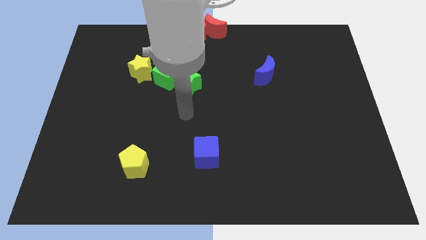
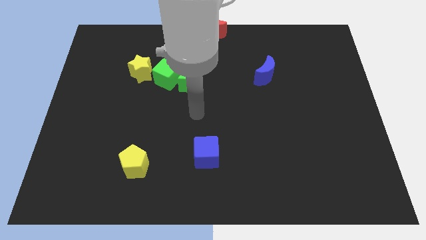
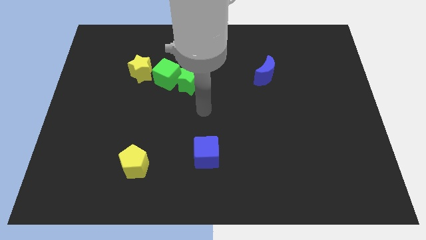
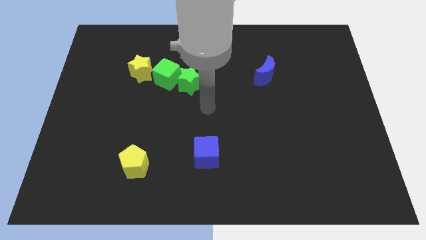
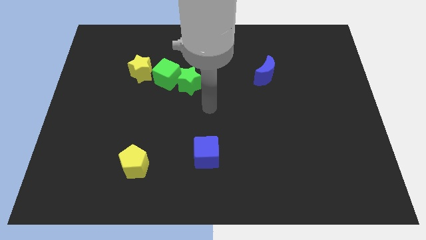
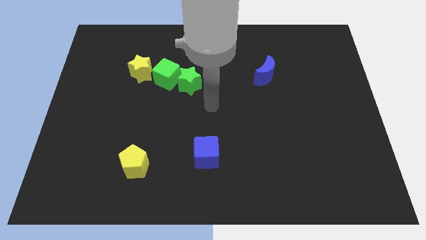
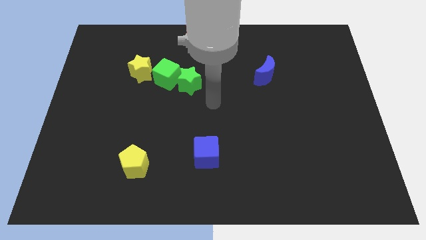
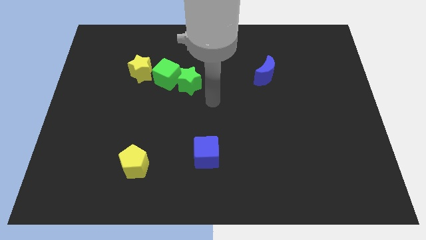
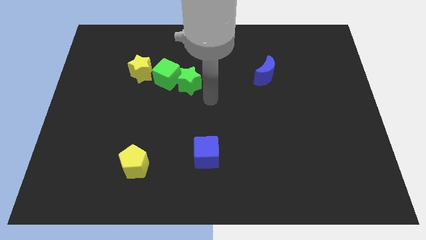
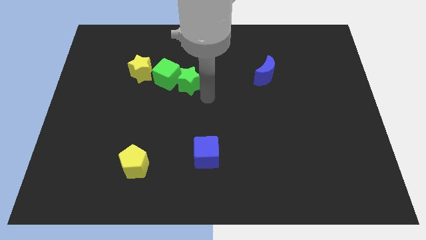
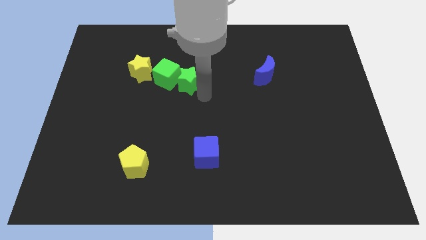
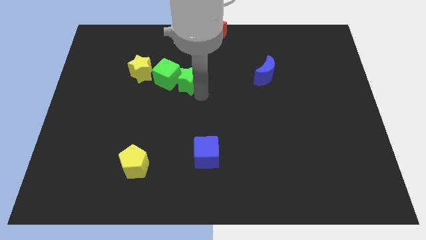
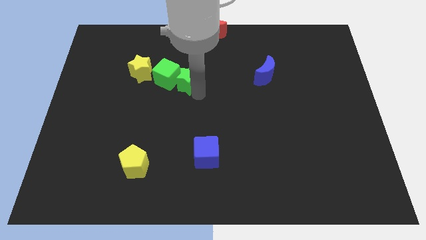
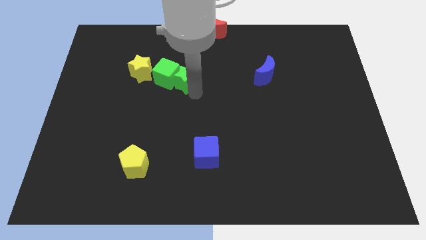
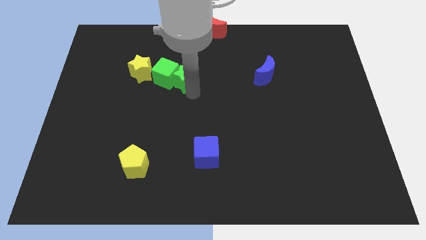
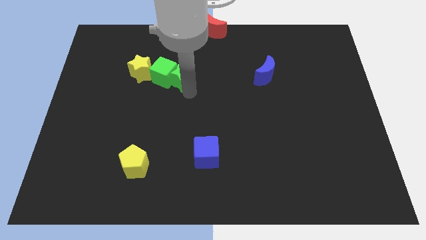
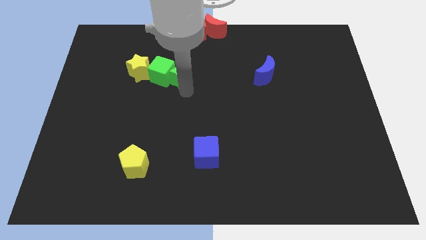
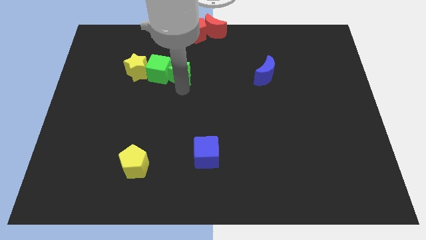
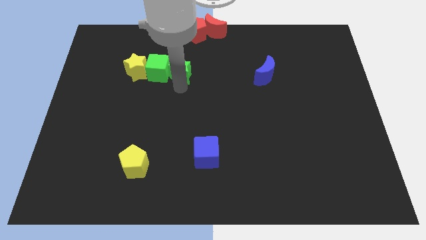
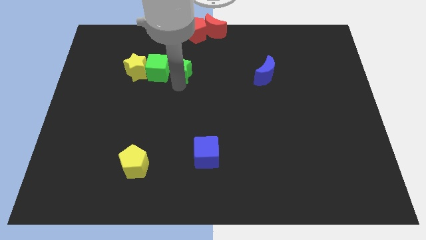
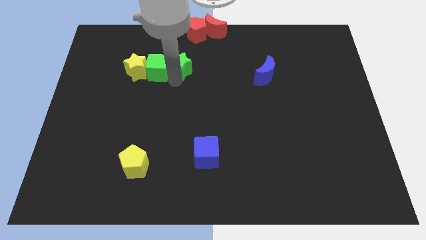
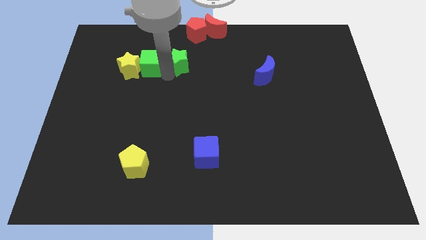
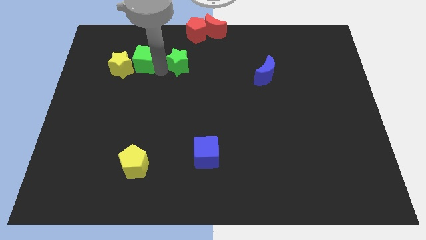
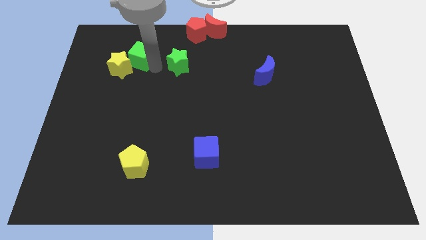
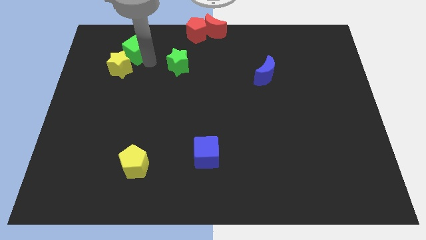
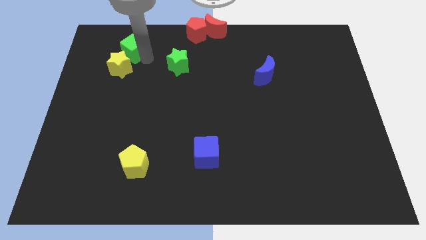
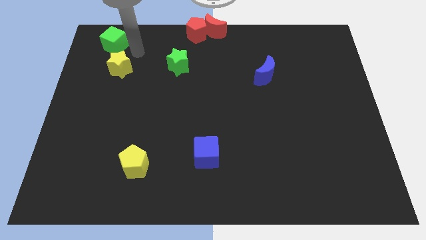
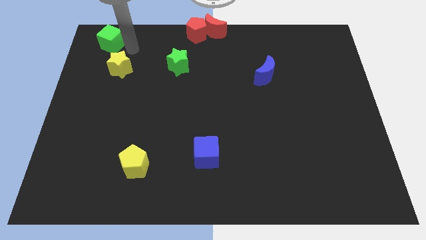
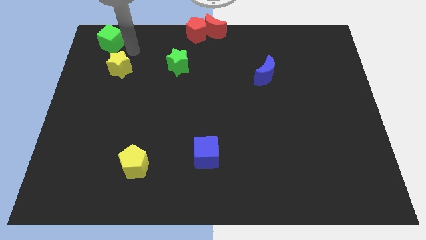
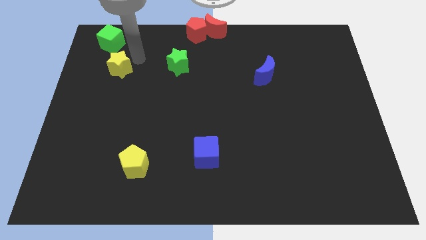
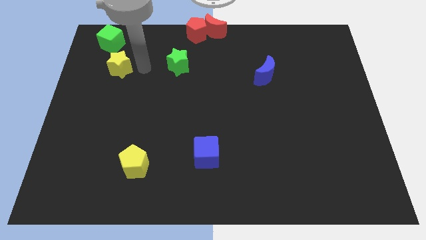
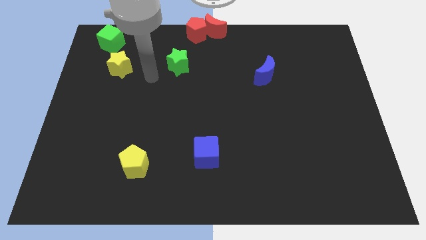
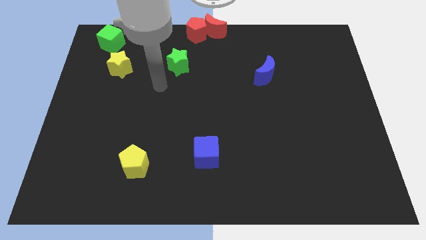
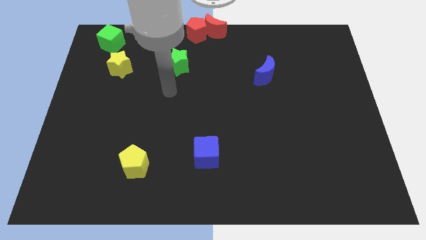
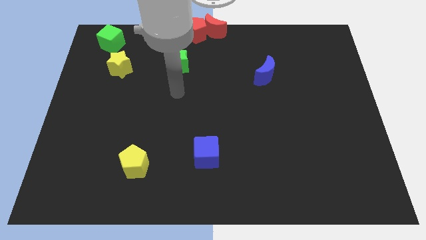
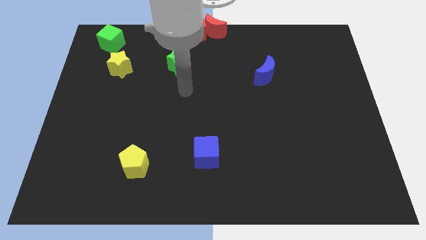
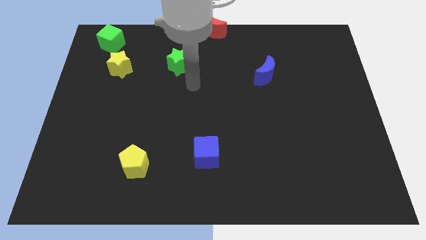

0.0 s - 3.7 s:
move green cube toward the top left of the board

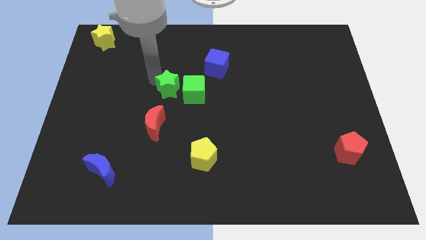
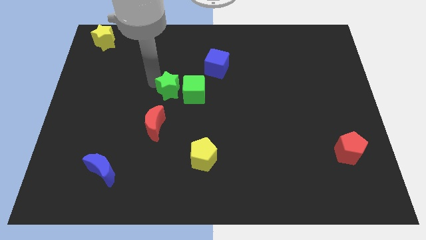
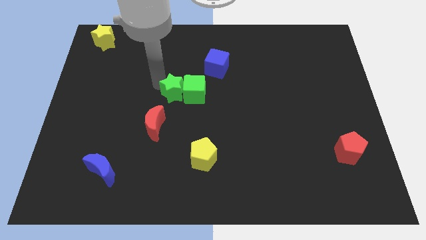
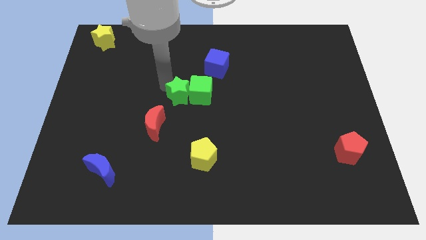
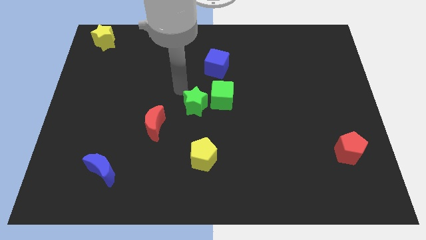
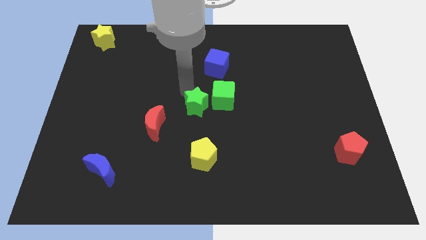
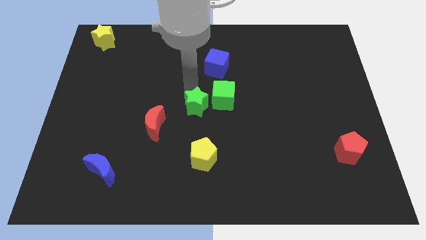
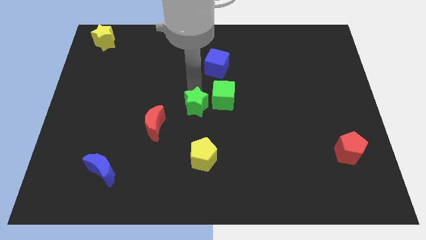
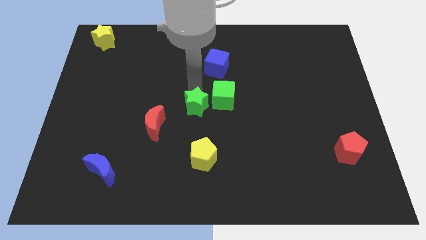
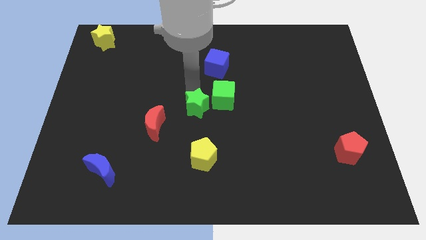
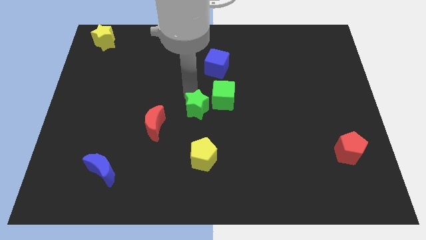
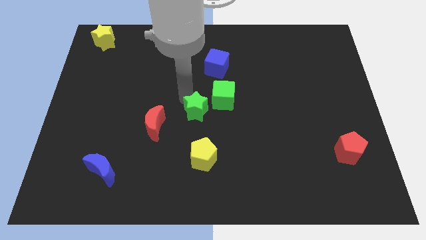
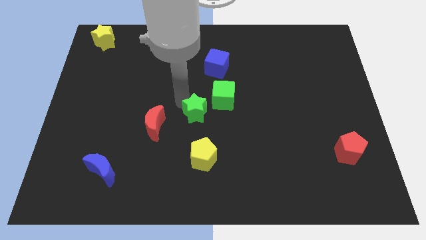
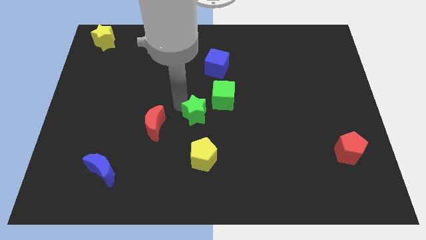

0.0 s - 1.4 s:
place green star to the top of yellow pentagon

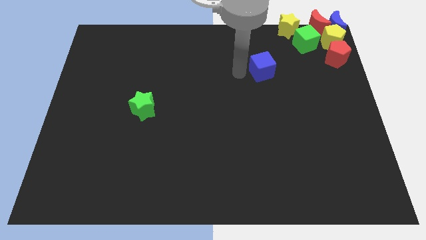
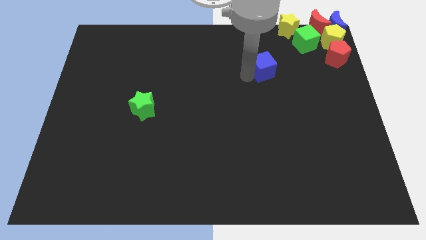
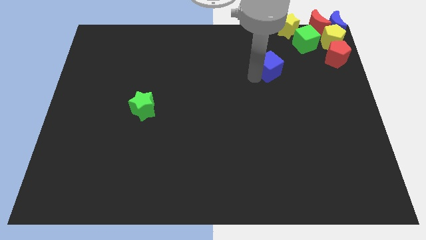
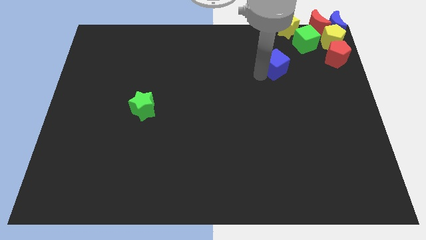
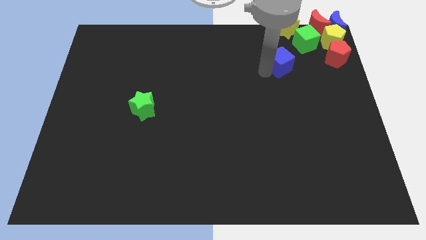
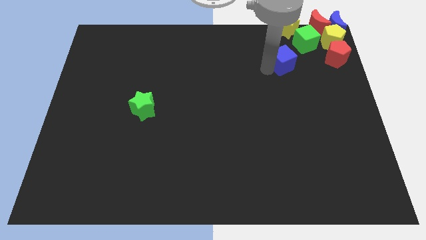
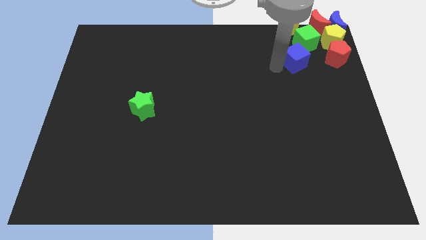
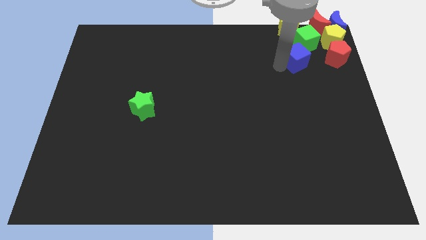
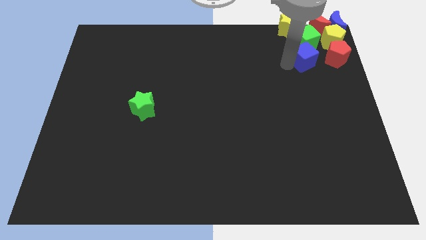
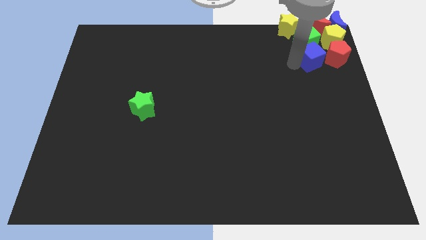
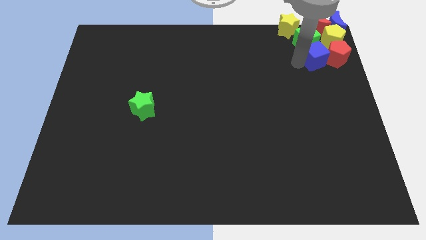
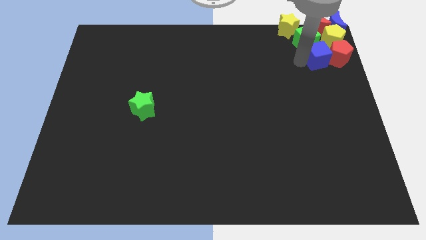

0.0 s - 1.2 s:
push the blue cube below the green cube

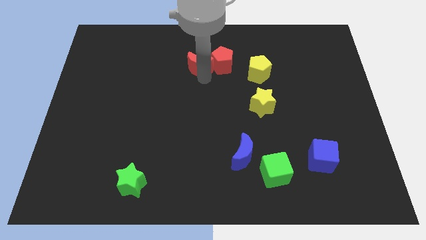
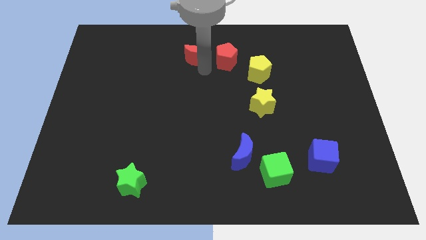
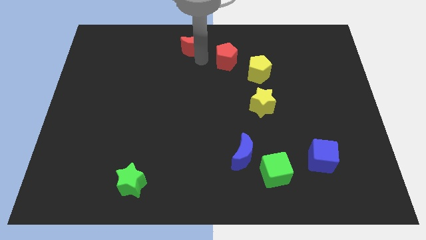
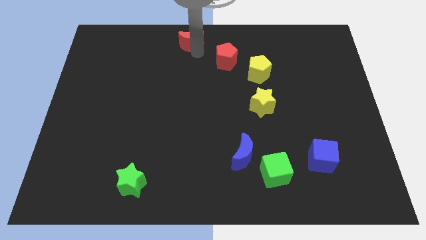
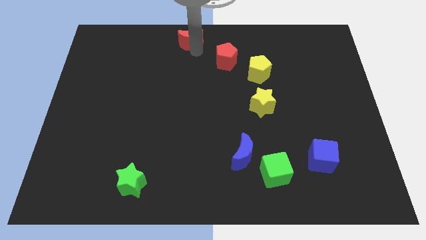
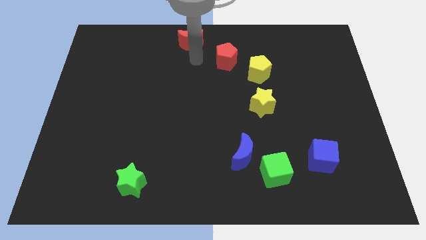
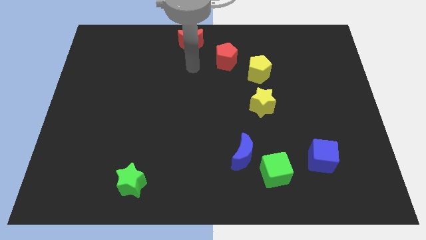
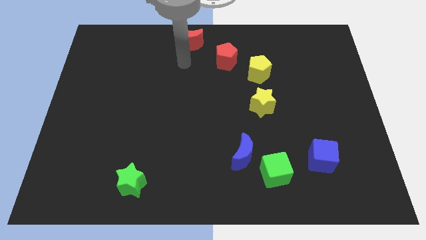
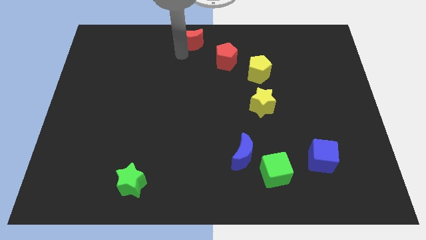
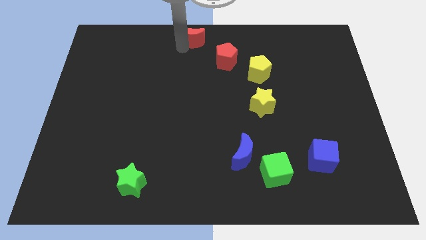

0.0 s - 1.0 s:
separate the red crescent and red pentagon

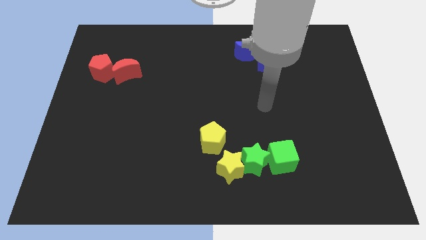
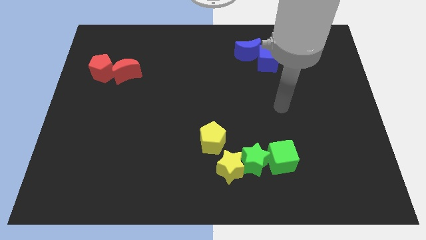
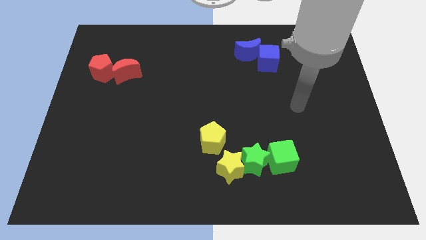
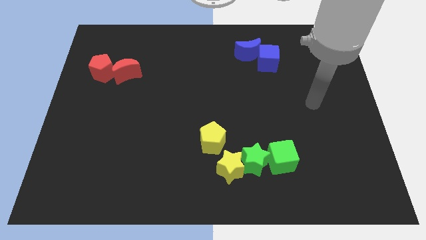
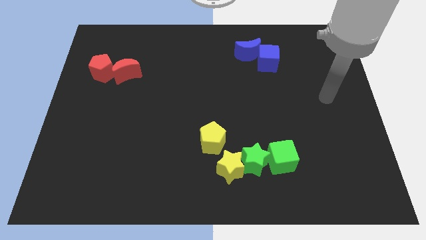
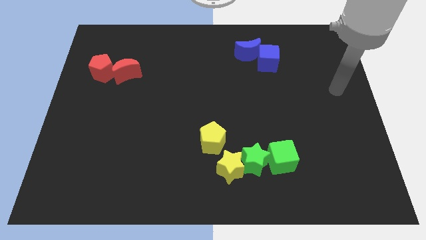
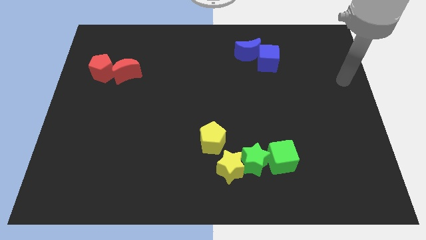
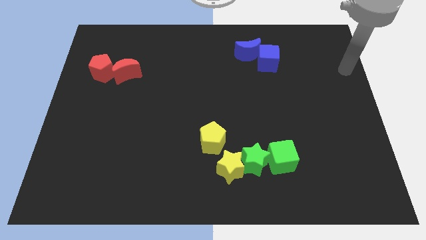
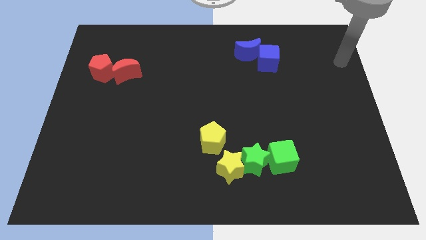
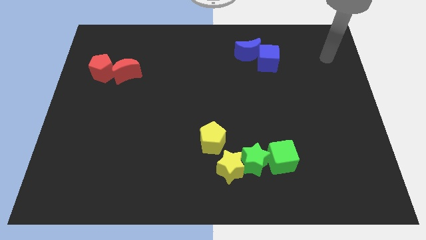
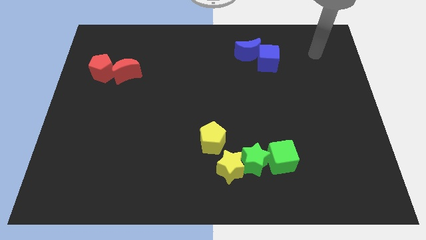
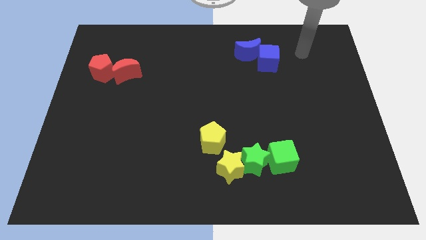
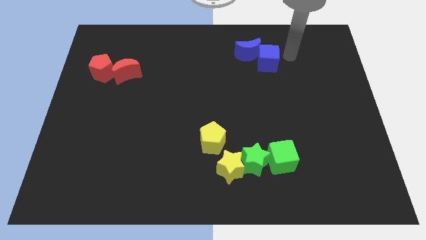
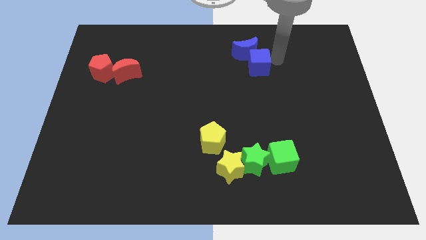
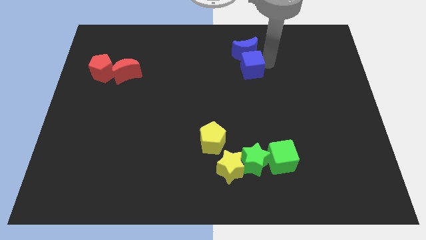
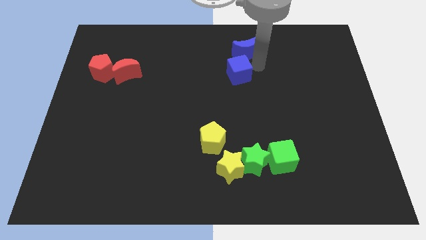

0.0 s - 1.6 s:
push blue cube below blue crescent

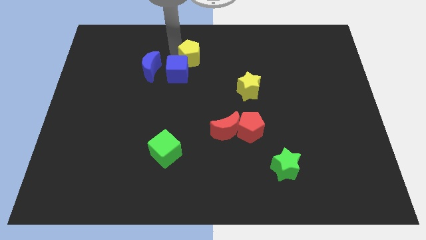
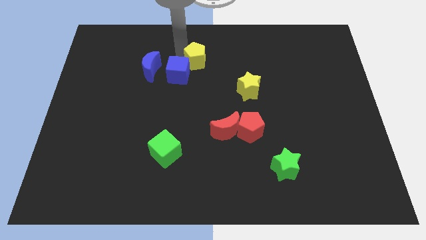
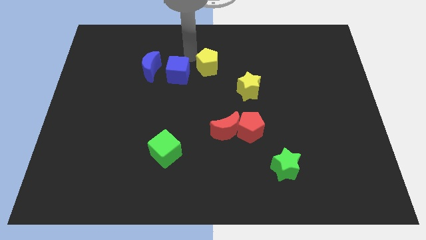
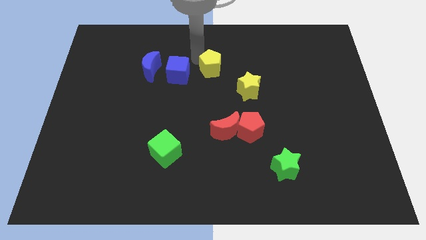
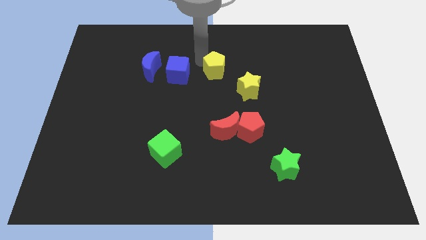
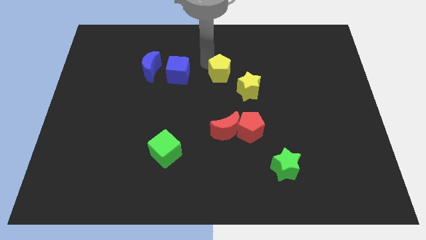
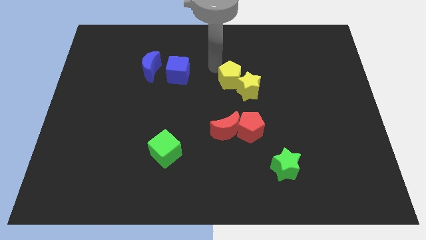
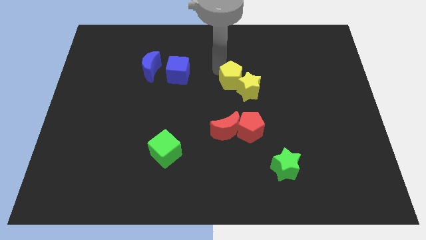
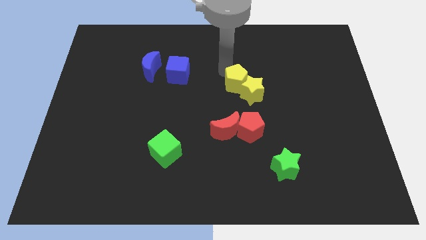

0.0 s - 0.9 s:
push the yellow pentagon towards the yellow star
